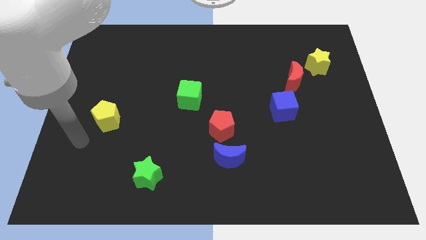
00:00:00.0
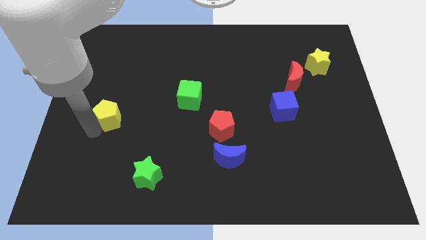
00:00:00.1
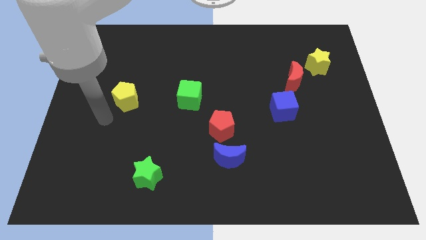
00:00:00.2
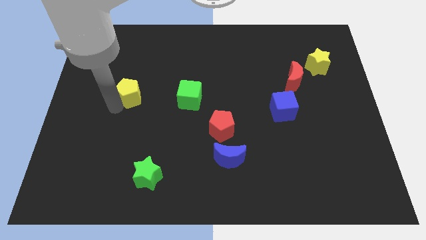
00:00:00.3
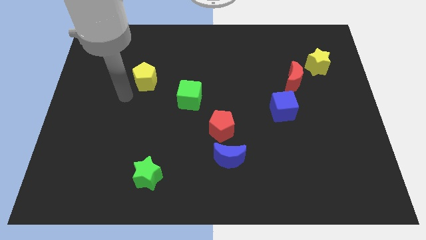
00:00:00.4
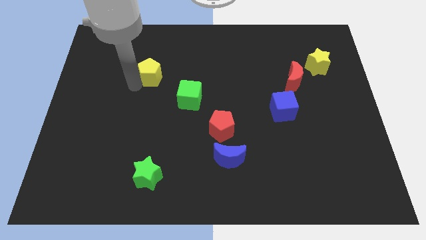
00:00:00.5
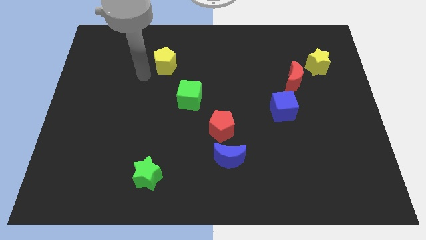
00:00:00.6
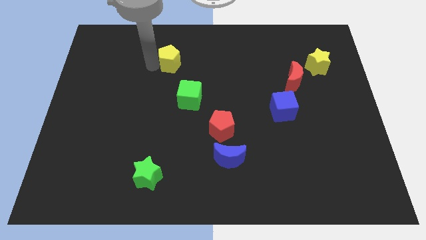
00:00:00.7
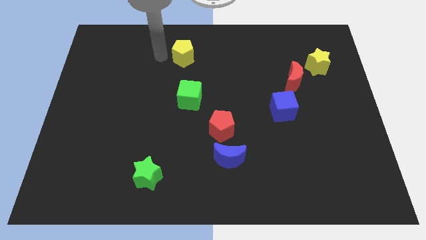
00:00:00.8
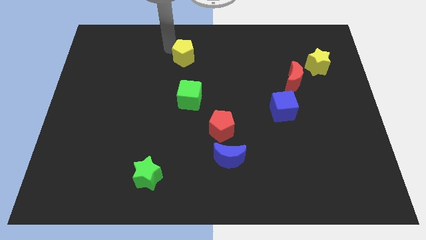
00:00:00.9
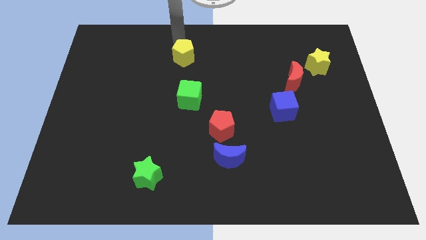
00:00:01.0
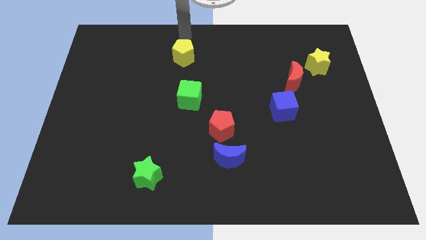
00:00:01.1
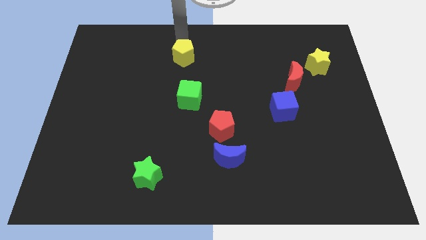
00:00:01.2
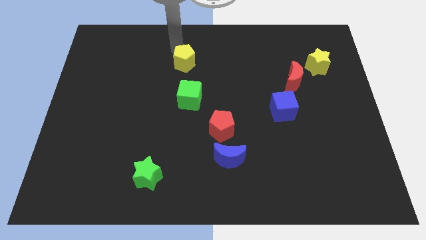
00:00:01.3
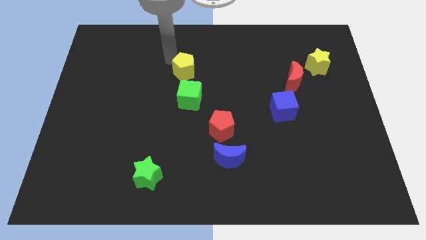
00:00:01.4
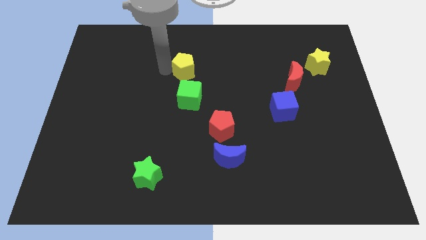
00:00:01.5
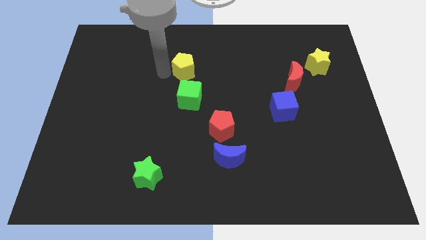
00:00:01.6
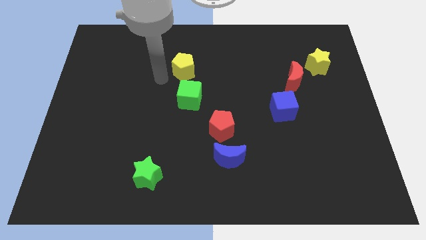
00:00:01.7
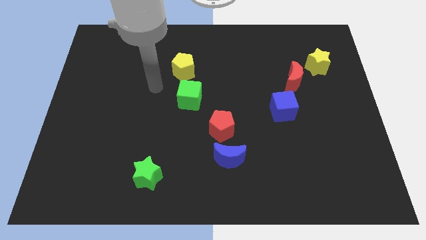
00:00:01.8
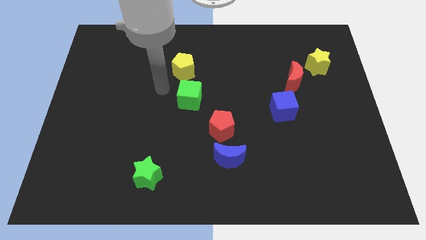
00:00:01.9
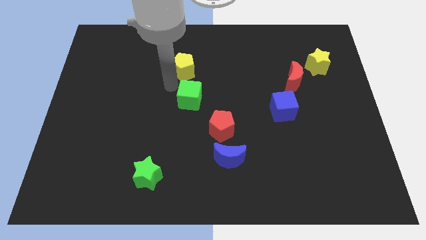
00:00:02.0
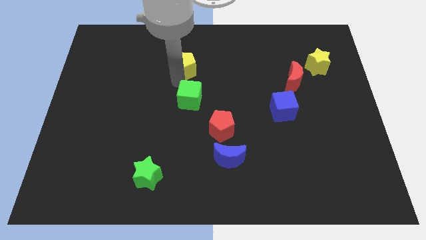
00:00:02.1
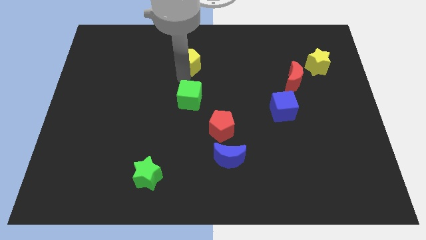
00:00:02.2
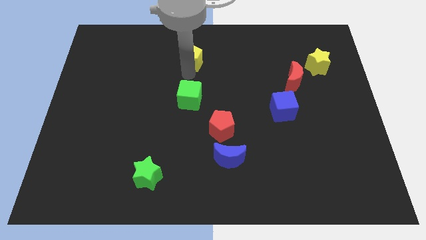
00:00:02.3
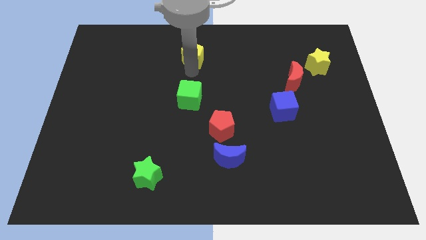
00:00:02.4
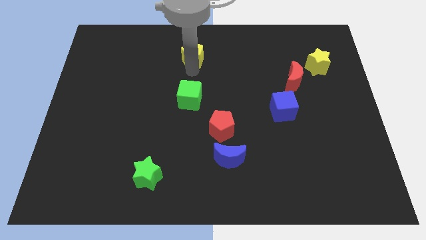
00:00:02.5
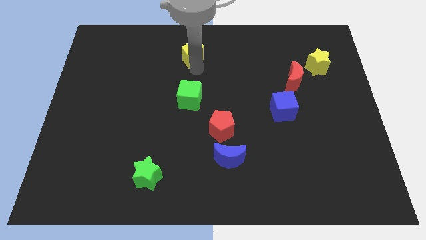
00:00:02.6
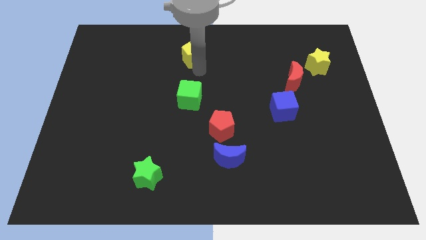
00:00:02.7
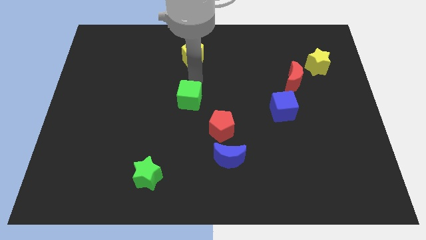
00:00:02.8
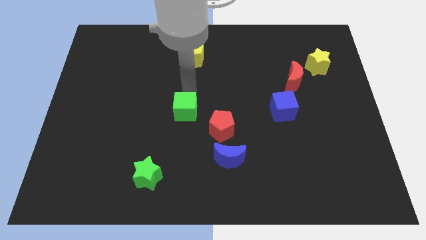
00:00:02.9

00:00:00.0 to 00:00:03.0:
place the yellow pentagon vertically above the green cube

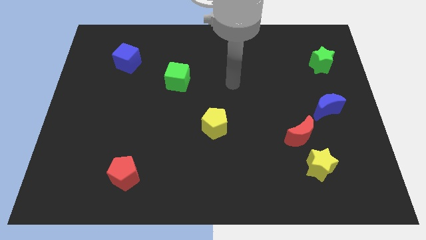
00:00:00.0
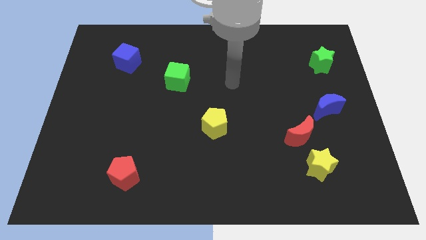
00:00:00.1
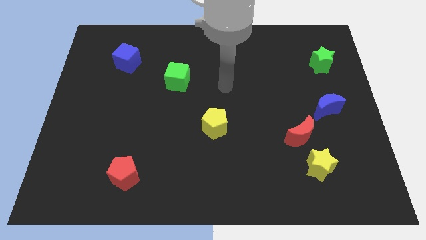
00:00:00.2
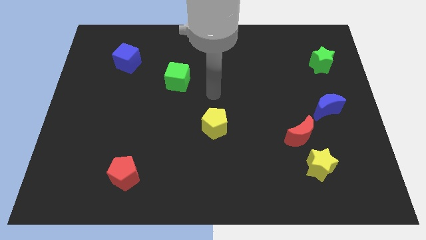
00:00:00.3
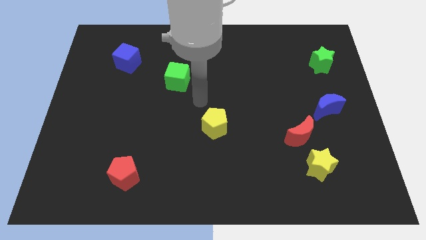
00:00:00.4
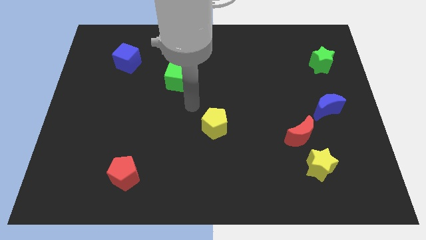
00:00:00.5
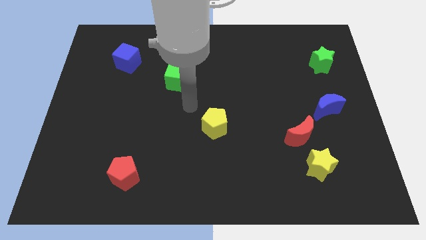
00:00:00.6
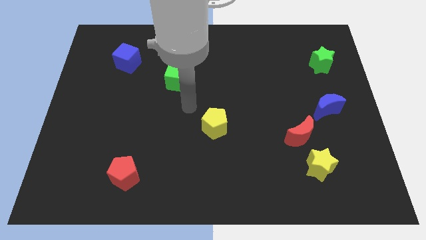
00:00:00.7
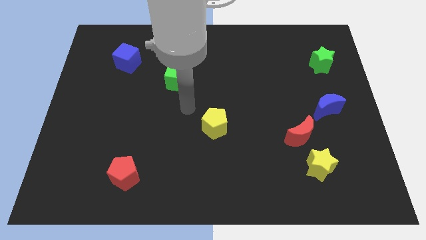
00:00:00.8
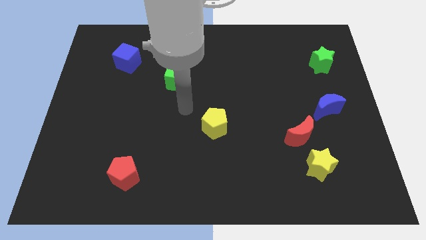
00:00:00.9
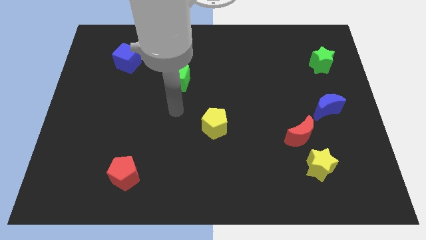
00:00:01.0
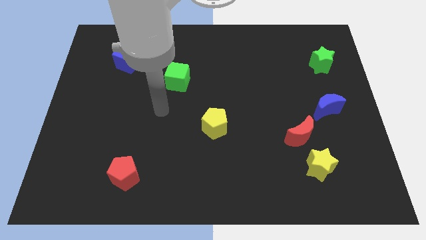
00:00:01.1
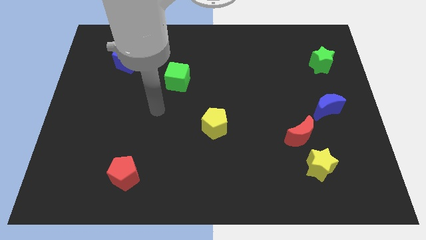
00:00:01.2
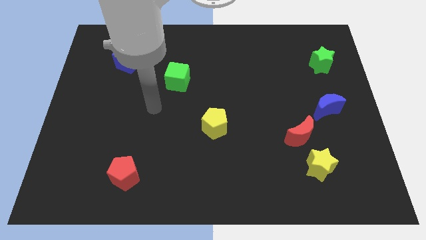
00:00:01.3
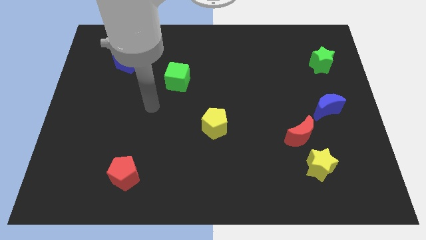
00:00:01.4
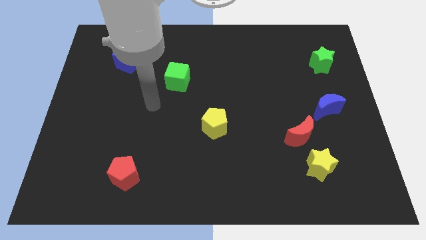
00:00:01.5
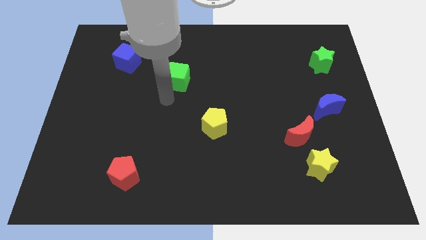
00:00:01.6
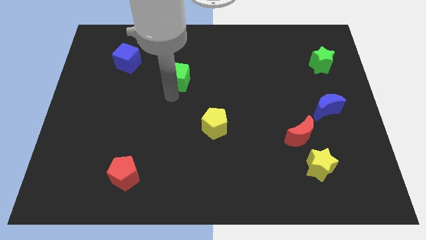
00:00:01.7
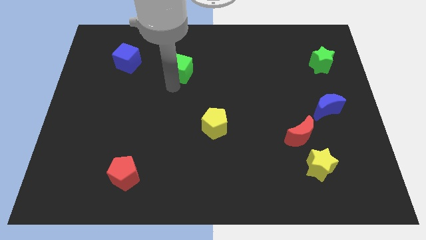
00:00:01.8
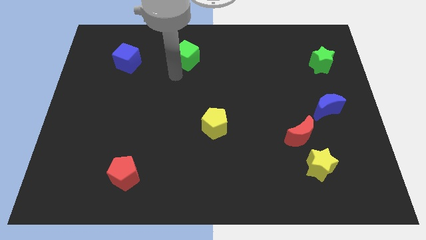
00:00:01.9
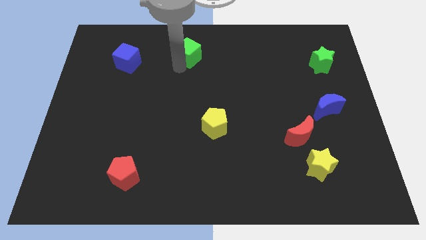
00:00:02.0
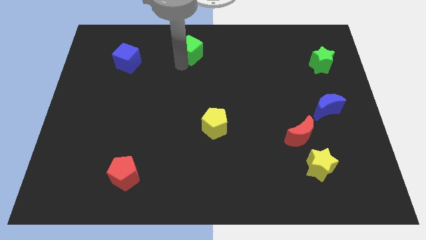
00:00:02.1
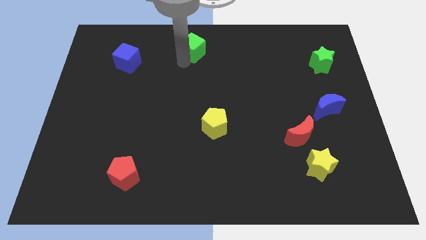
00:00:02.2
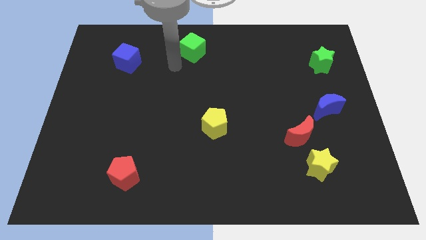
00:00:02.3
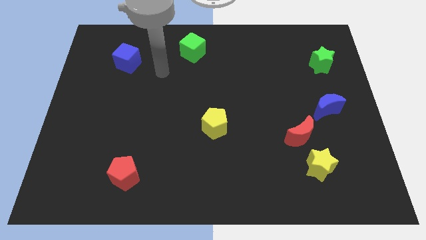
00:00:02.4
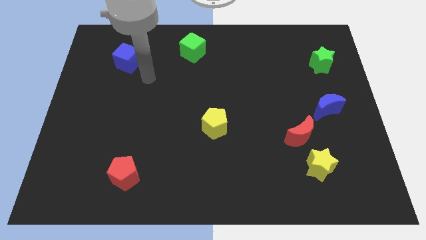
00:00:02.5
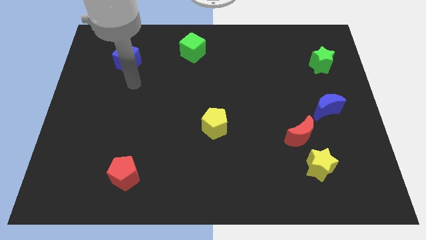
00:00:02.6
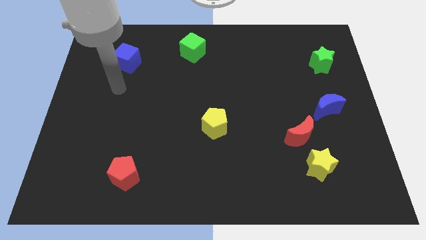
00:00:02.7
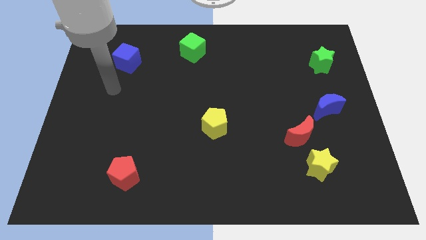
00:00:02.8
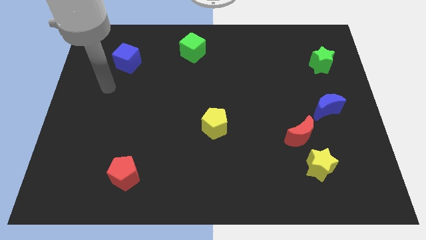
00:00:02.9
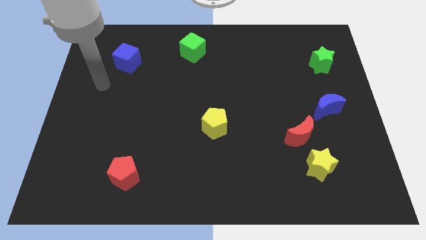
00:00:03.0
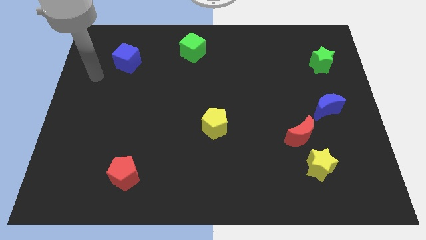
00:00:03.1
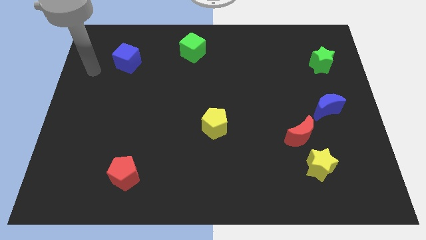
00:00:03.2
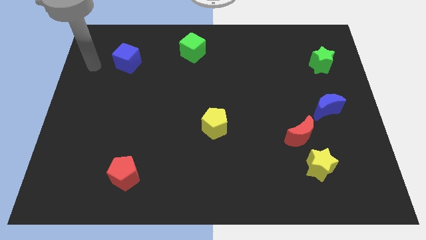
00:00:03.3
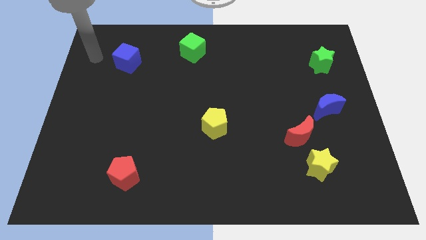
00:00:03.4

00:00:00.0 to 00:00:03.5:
push the green cube to the top of the board

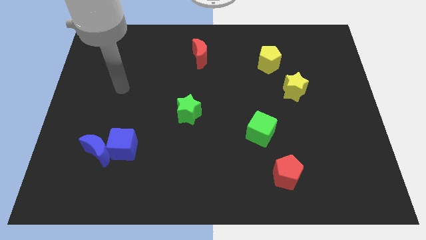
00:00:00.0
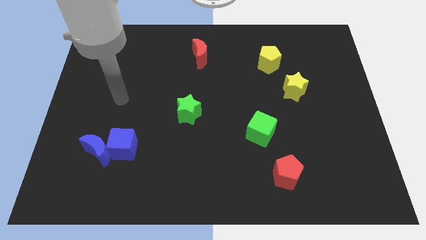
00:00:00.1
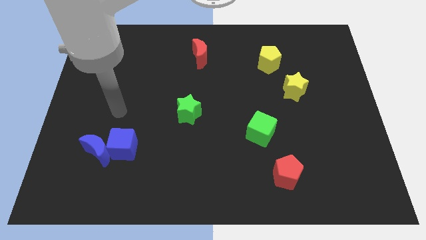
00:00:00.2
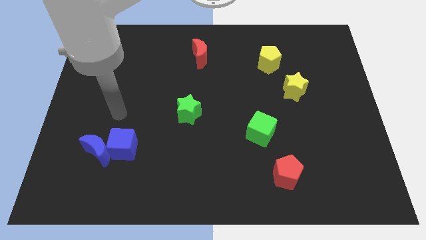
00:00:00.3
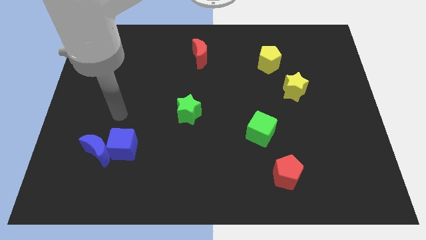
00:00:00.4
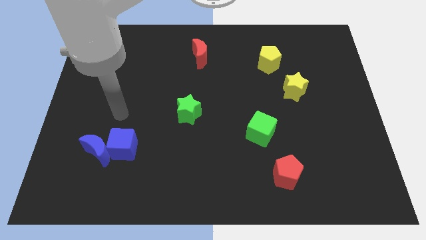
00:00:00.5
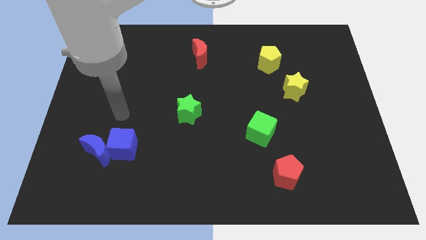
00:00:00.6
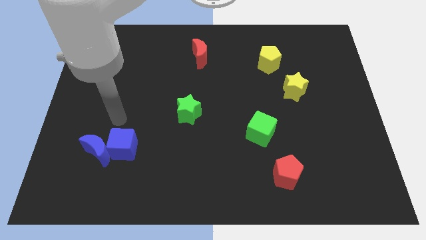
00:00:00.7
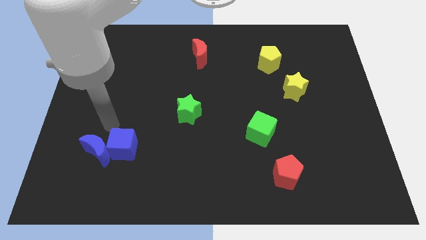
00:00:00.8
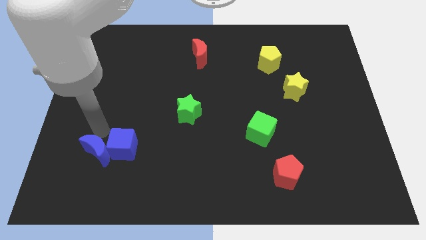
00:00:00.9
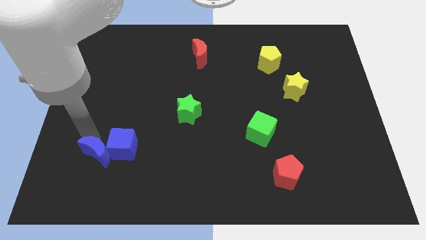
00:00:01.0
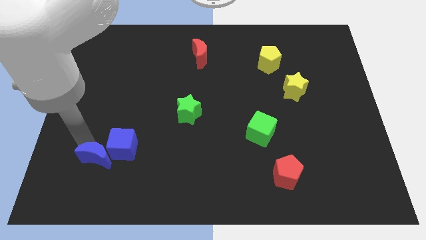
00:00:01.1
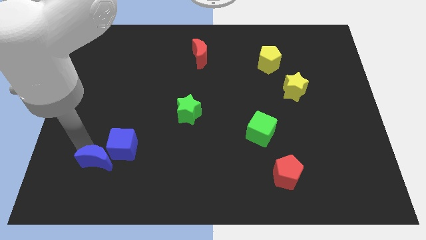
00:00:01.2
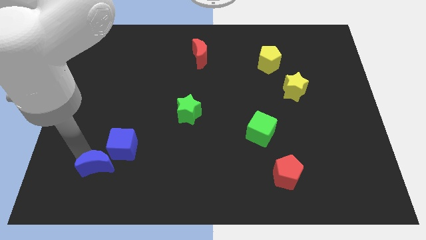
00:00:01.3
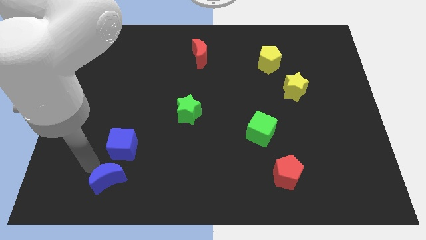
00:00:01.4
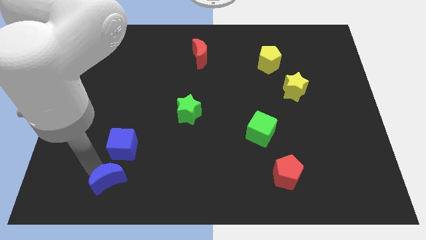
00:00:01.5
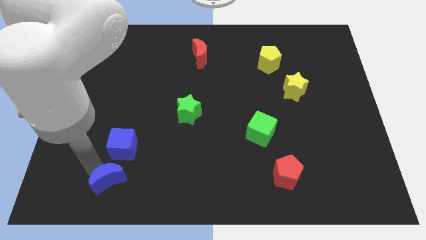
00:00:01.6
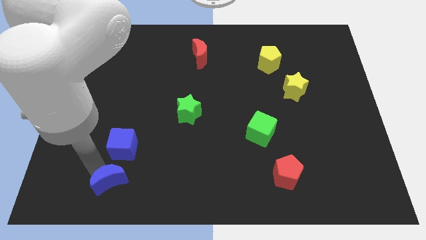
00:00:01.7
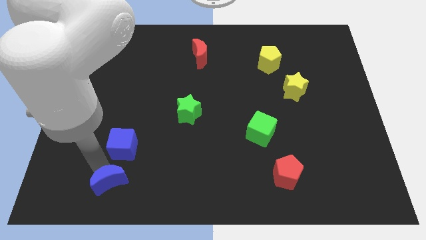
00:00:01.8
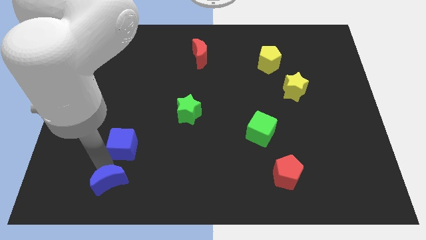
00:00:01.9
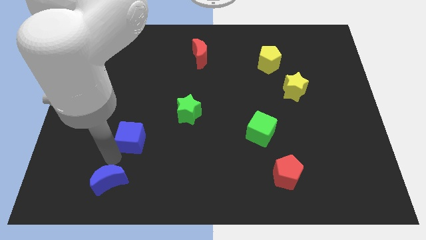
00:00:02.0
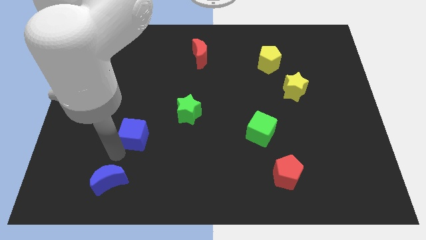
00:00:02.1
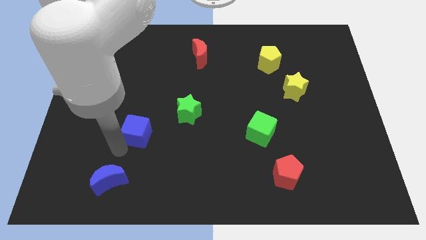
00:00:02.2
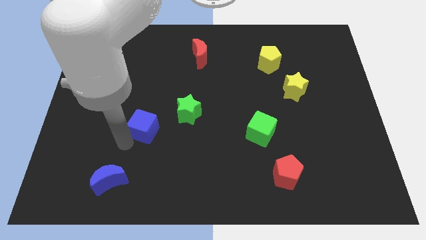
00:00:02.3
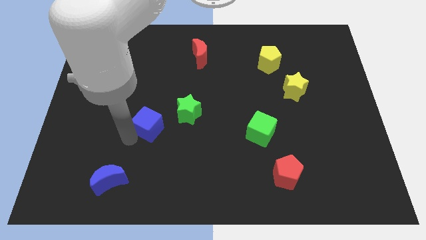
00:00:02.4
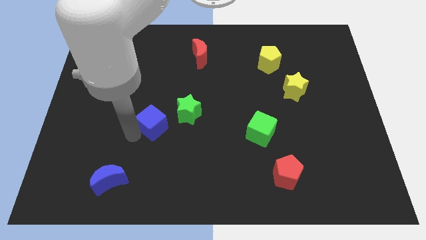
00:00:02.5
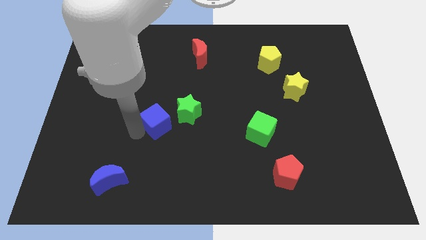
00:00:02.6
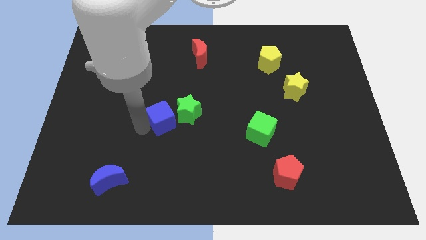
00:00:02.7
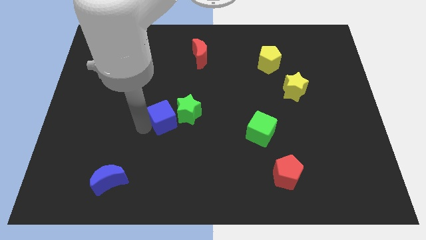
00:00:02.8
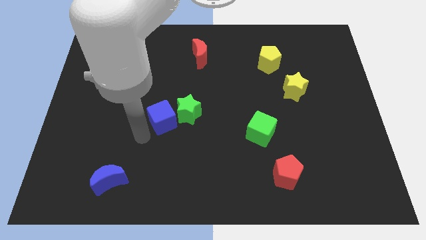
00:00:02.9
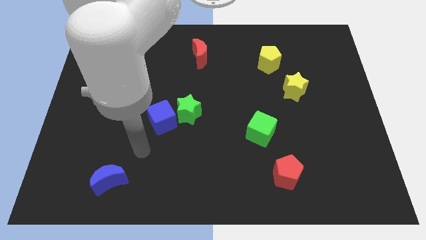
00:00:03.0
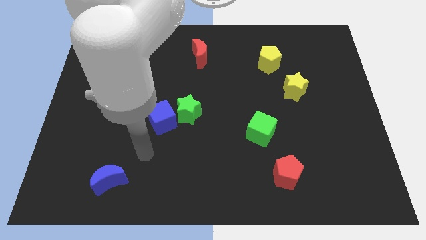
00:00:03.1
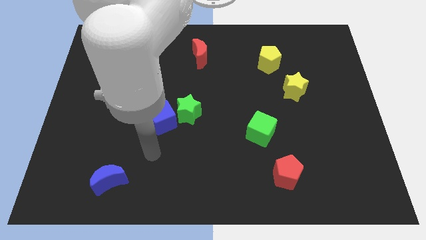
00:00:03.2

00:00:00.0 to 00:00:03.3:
move the blue cube left beside the green star
